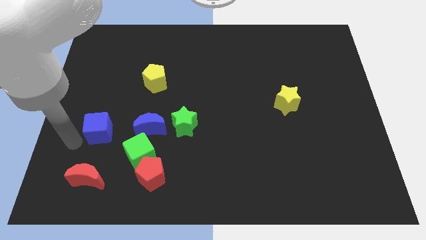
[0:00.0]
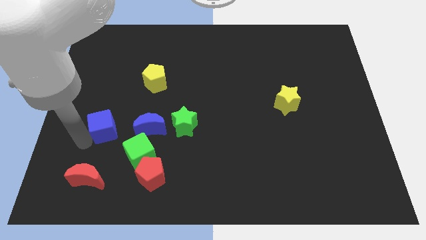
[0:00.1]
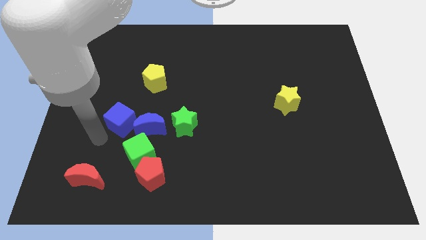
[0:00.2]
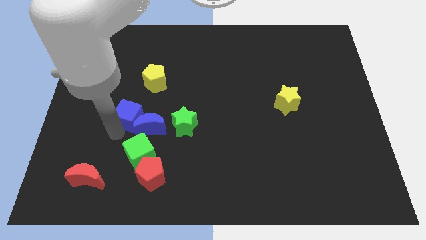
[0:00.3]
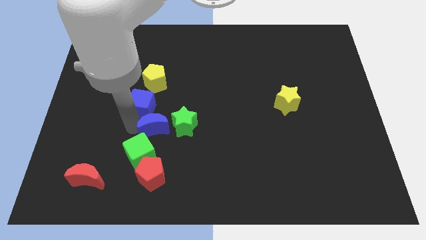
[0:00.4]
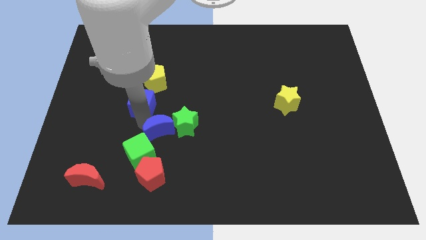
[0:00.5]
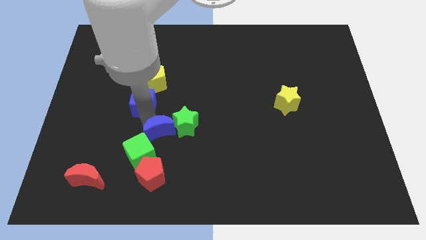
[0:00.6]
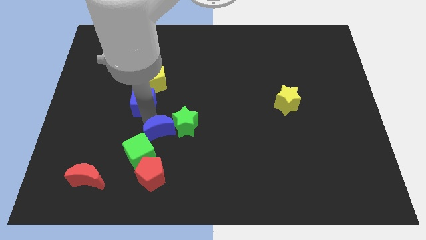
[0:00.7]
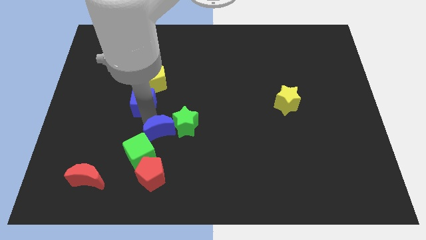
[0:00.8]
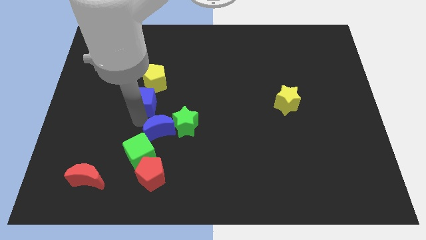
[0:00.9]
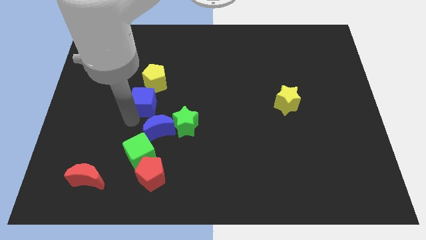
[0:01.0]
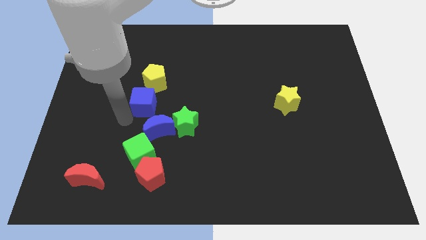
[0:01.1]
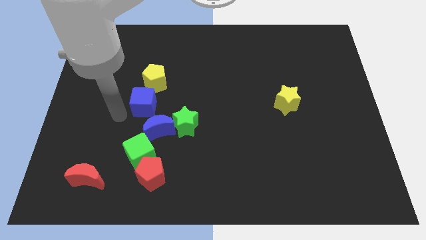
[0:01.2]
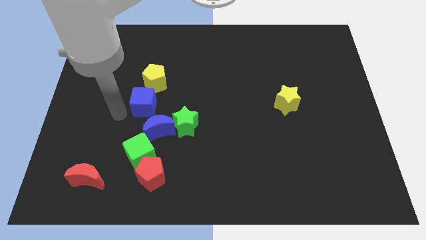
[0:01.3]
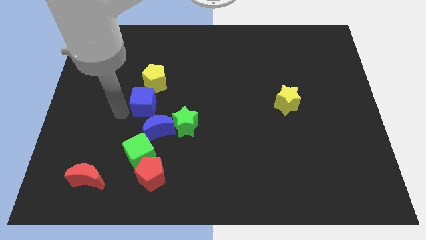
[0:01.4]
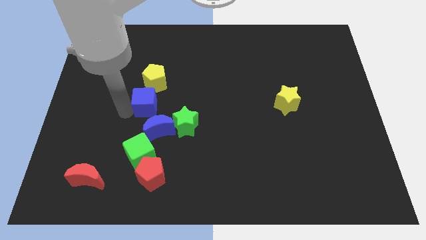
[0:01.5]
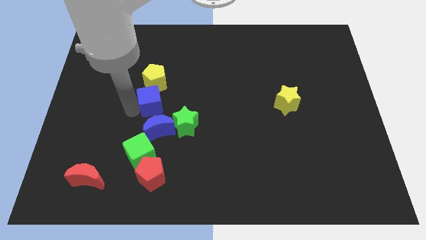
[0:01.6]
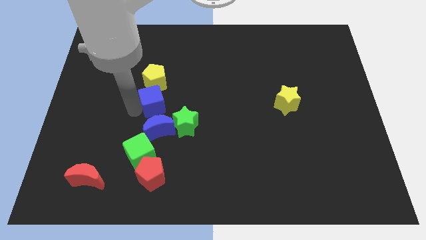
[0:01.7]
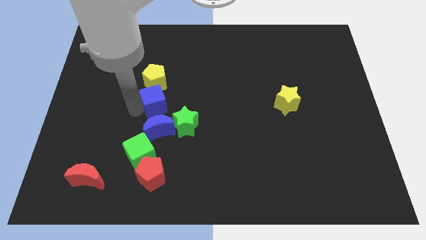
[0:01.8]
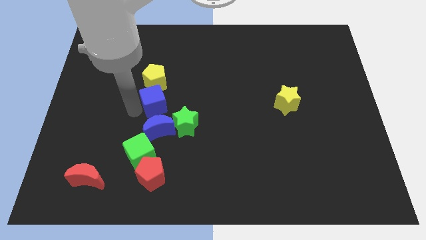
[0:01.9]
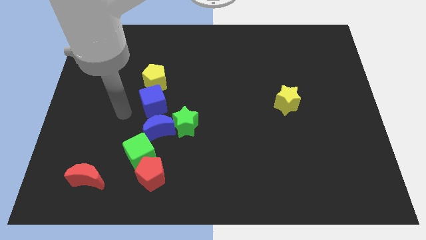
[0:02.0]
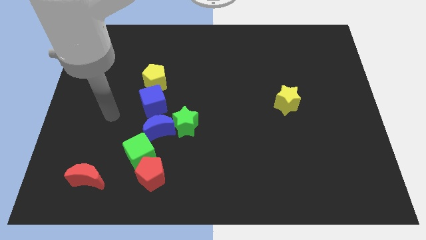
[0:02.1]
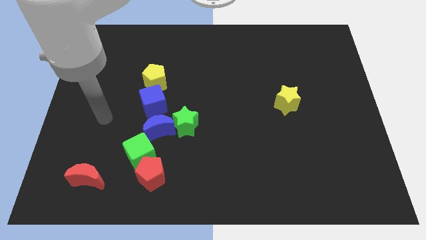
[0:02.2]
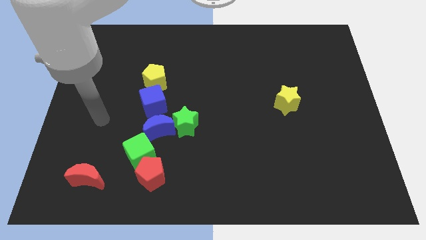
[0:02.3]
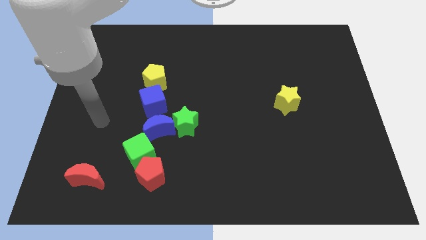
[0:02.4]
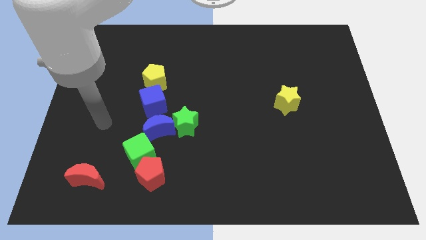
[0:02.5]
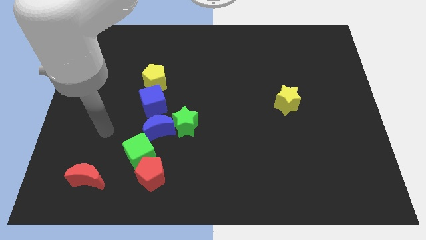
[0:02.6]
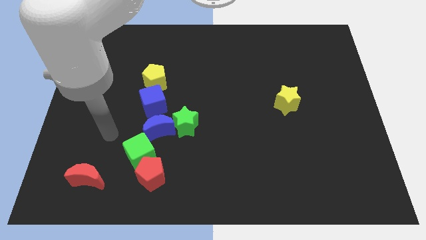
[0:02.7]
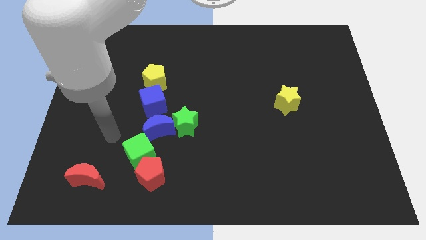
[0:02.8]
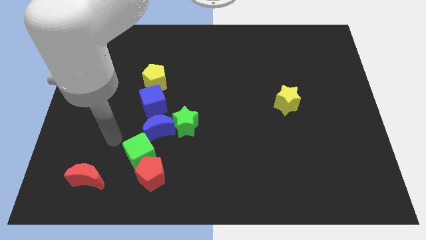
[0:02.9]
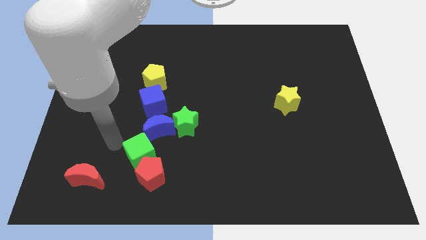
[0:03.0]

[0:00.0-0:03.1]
place blue cube to the bottom of yellow pentagon

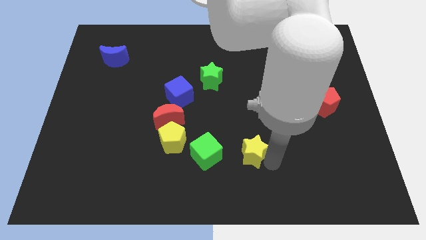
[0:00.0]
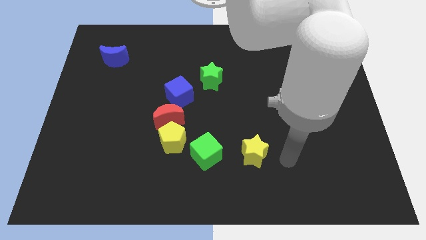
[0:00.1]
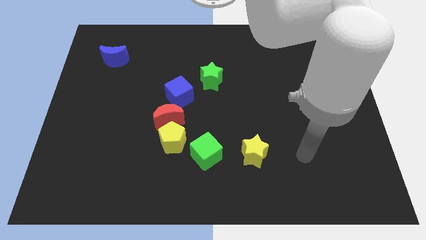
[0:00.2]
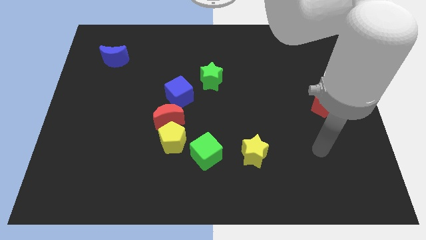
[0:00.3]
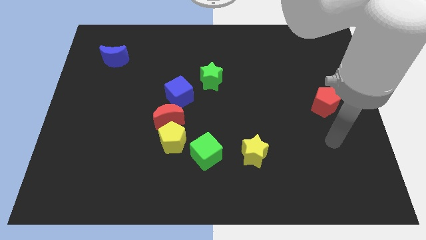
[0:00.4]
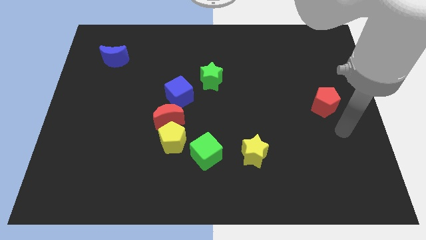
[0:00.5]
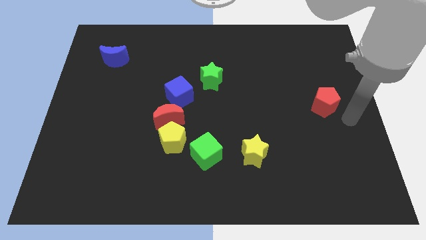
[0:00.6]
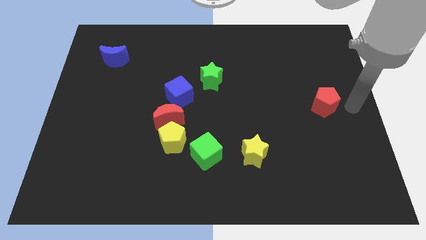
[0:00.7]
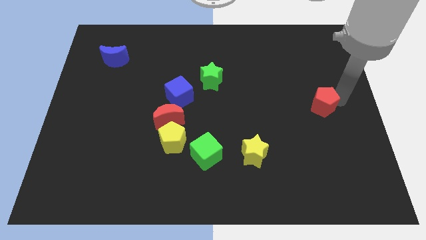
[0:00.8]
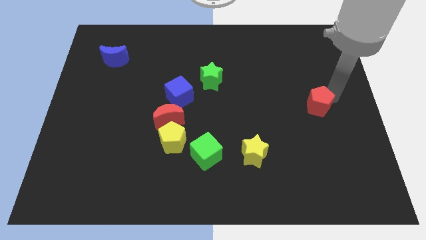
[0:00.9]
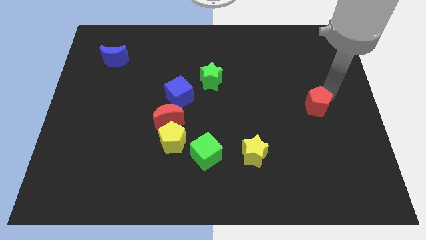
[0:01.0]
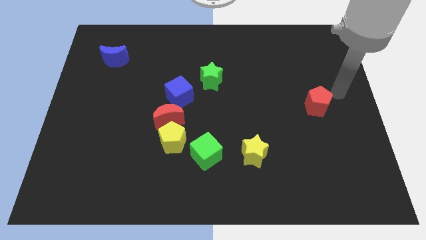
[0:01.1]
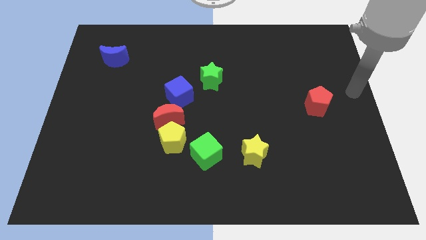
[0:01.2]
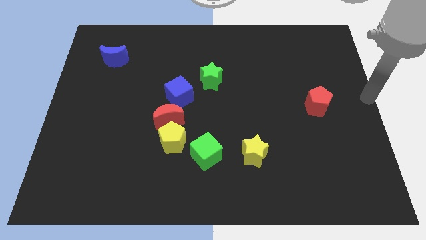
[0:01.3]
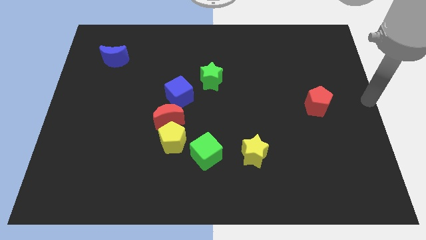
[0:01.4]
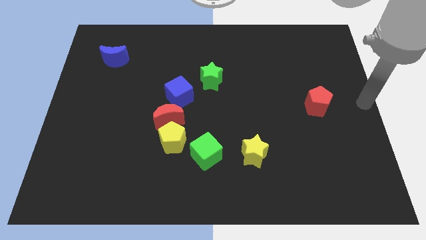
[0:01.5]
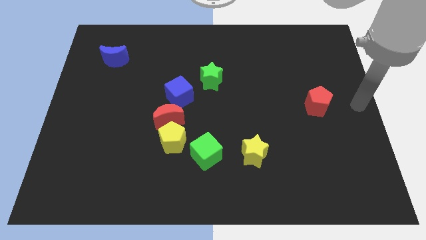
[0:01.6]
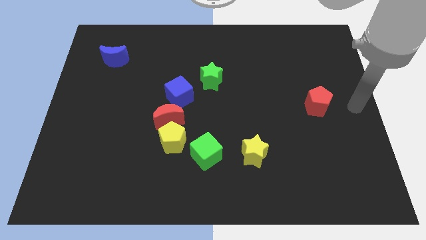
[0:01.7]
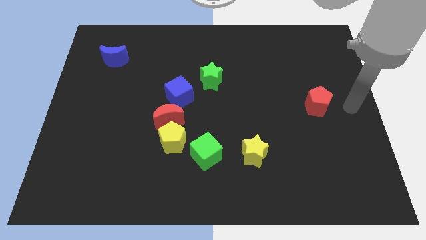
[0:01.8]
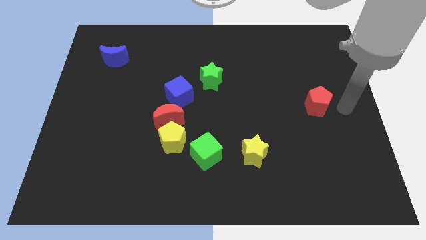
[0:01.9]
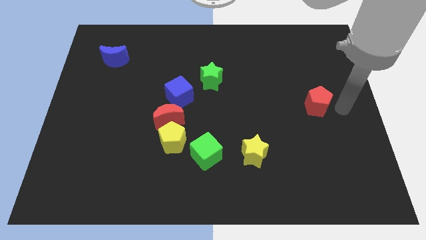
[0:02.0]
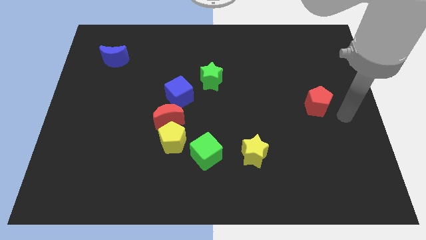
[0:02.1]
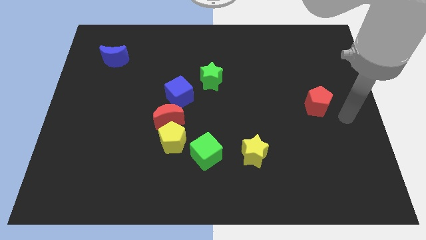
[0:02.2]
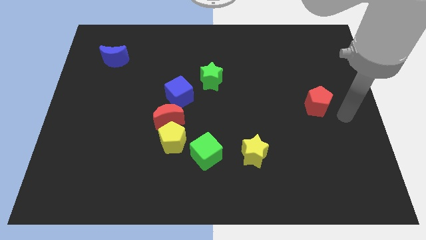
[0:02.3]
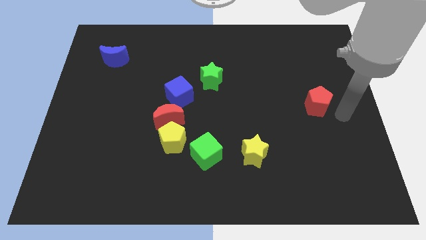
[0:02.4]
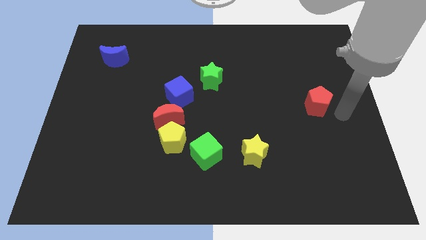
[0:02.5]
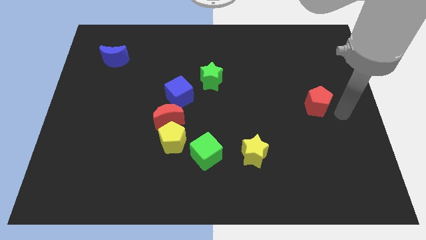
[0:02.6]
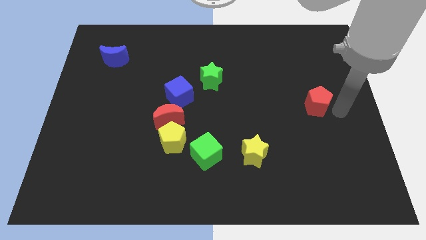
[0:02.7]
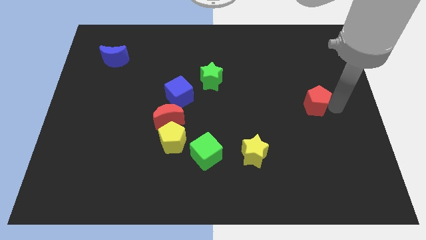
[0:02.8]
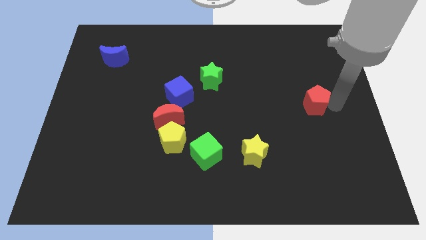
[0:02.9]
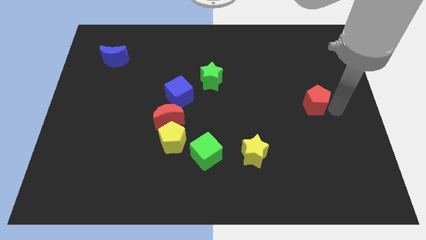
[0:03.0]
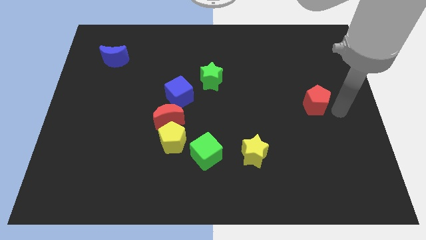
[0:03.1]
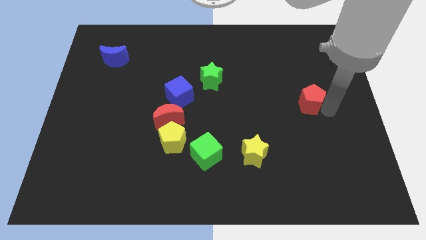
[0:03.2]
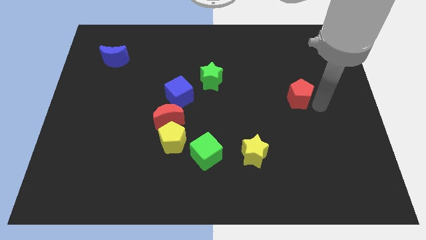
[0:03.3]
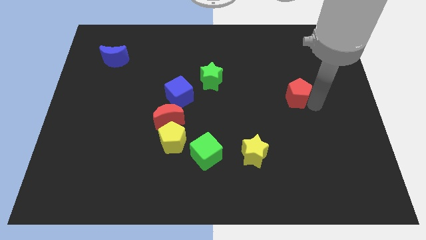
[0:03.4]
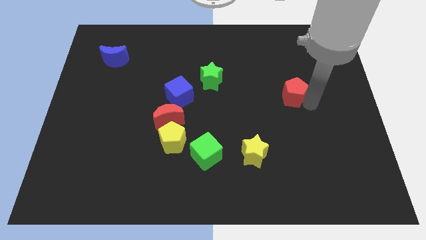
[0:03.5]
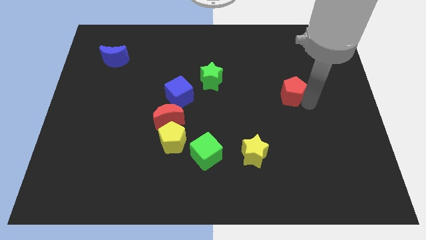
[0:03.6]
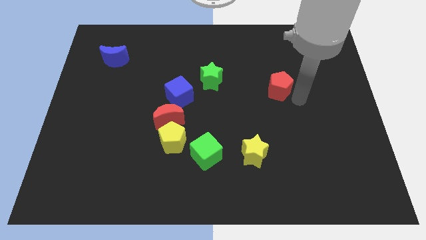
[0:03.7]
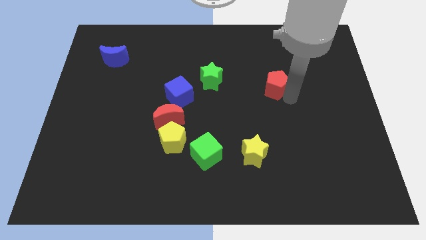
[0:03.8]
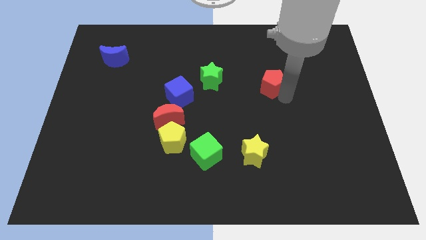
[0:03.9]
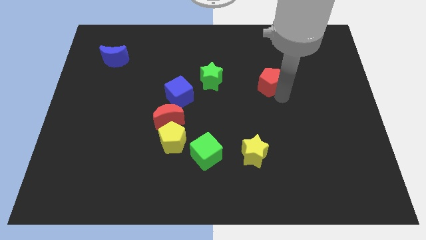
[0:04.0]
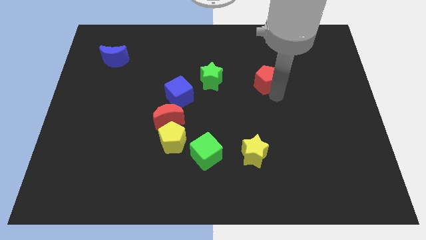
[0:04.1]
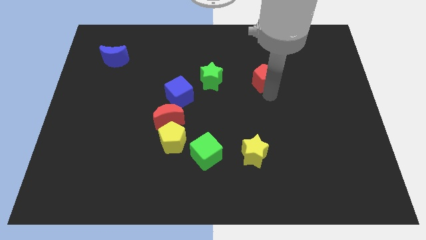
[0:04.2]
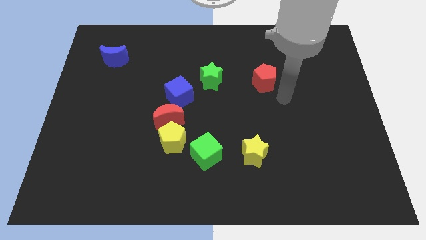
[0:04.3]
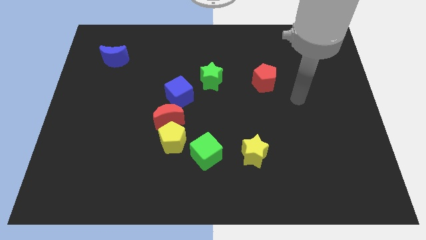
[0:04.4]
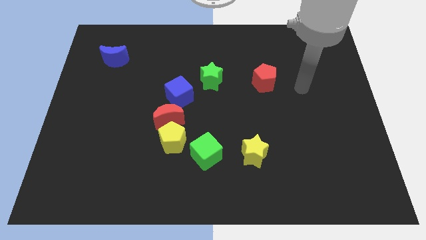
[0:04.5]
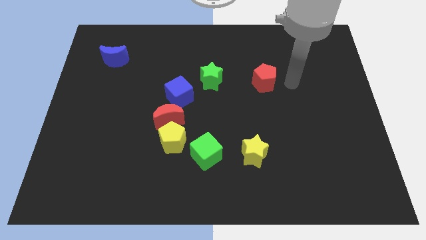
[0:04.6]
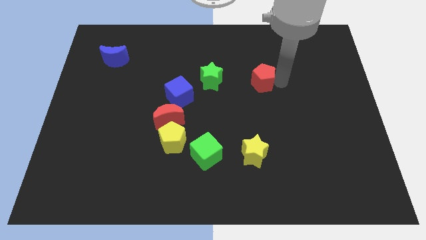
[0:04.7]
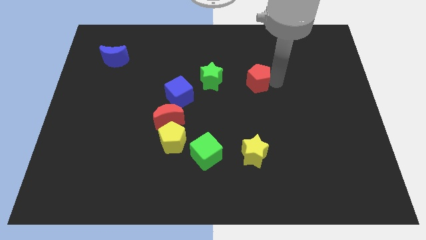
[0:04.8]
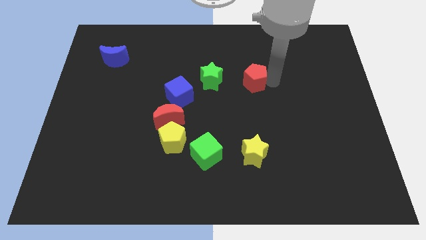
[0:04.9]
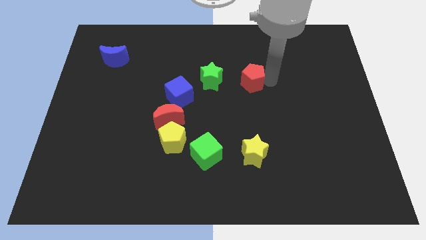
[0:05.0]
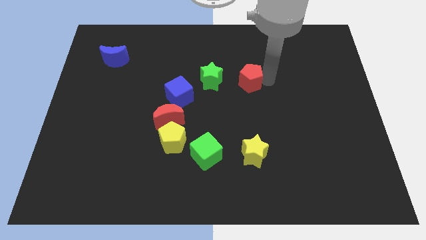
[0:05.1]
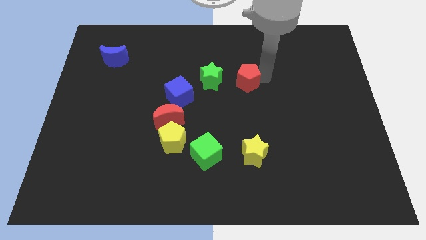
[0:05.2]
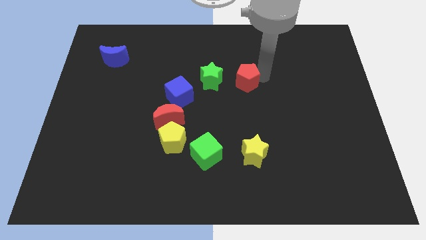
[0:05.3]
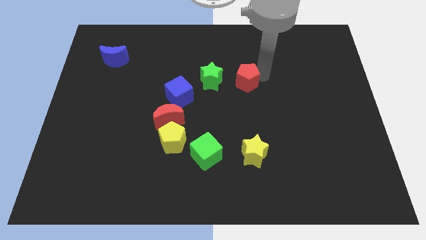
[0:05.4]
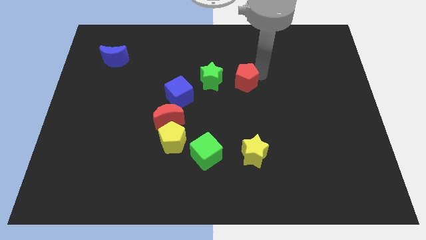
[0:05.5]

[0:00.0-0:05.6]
slide the red pentagon towards the right side of the green star

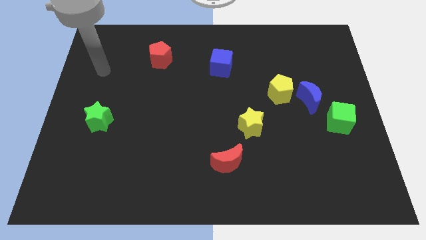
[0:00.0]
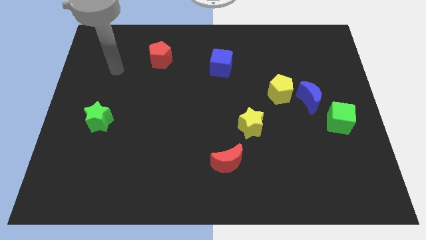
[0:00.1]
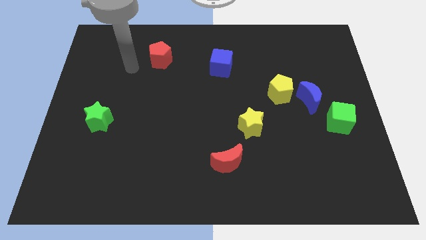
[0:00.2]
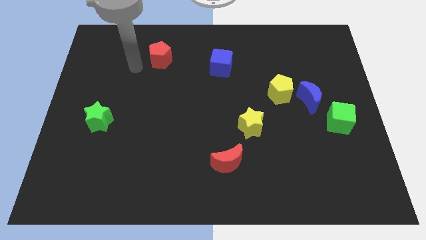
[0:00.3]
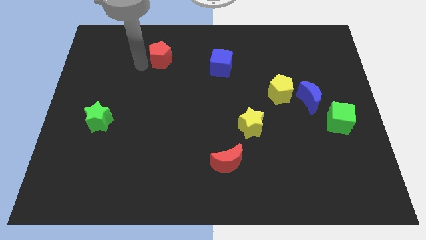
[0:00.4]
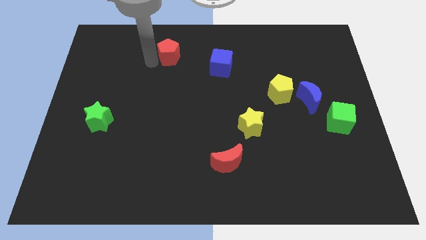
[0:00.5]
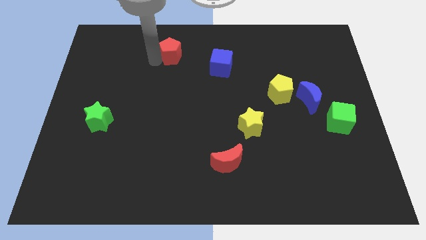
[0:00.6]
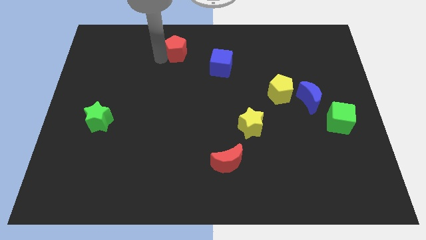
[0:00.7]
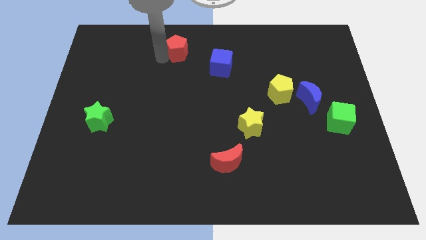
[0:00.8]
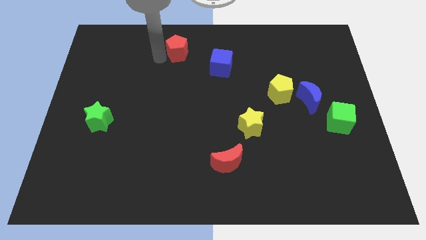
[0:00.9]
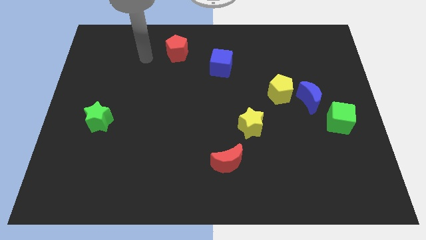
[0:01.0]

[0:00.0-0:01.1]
push red pentagon towards top center
